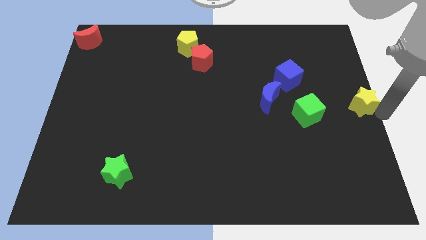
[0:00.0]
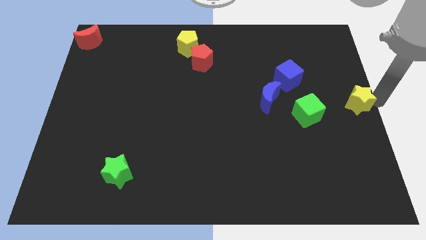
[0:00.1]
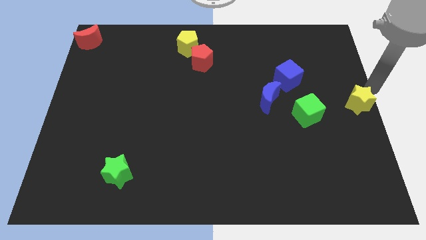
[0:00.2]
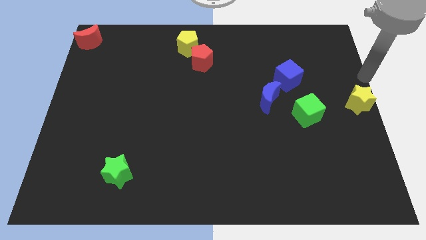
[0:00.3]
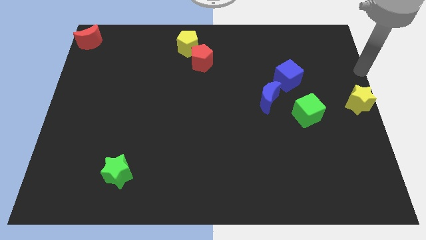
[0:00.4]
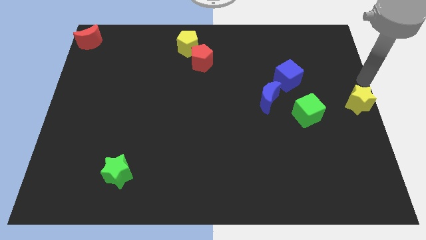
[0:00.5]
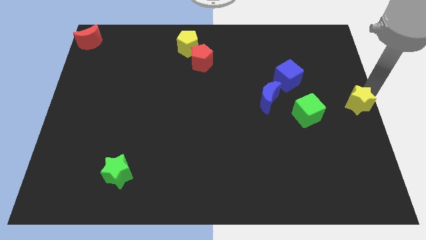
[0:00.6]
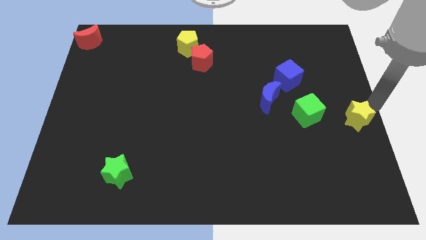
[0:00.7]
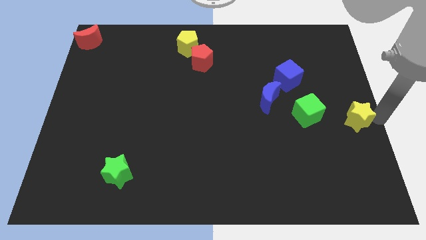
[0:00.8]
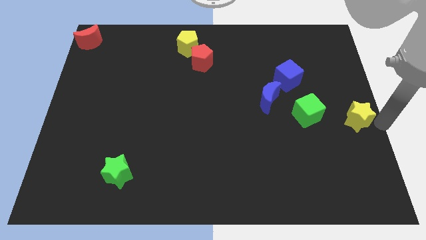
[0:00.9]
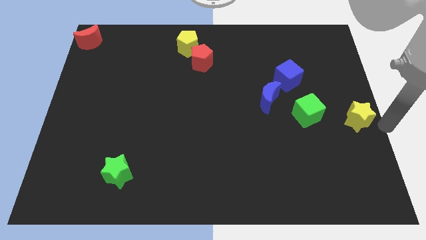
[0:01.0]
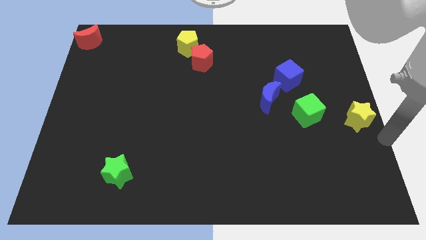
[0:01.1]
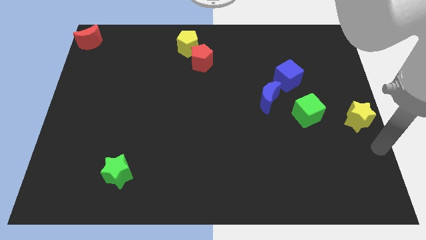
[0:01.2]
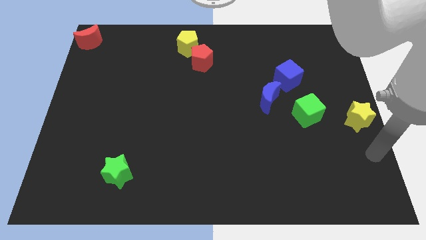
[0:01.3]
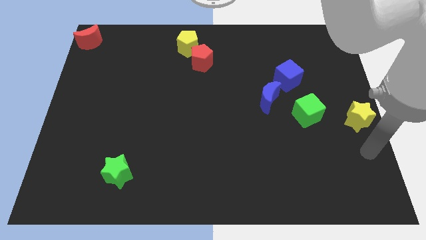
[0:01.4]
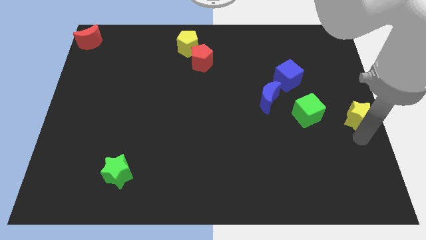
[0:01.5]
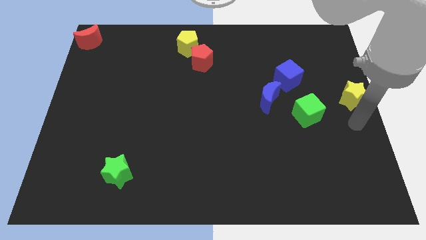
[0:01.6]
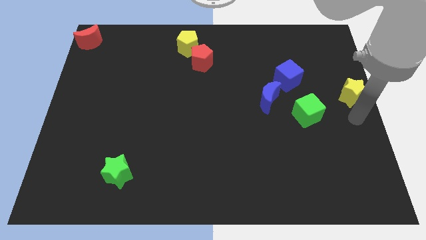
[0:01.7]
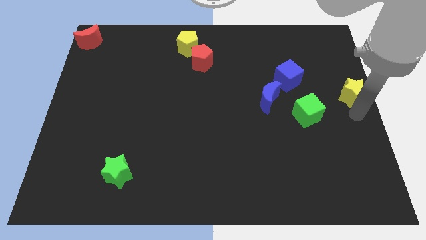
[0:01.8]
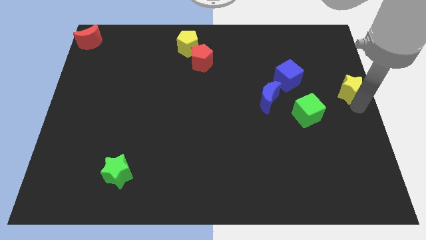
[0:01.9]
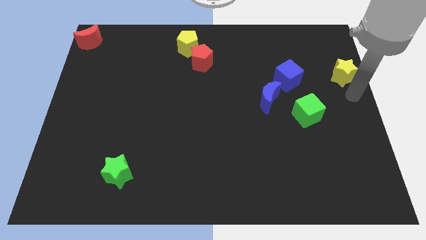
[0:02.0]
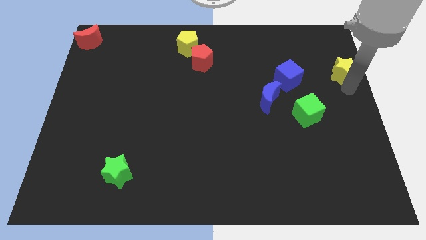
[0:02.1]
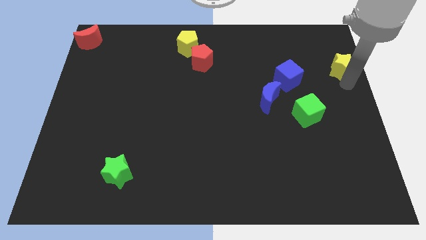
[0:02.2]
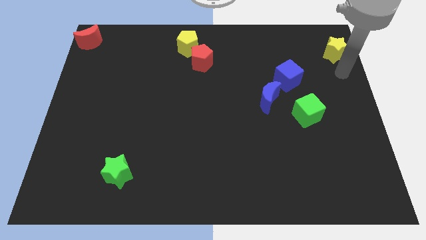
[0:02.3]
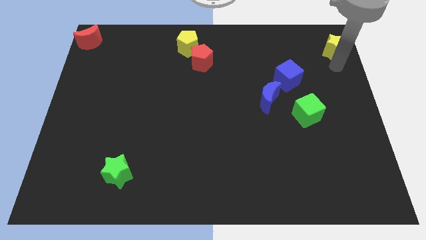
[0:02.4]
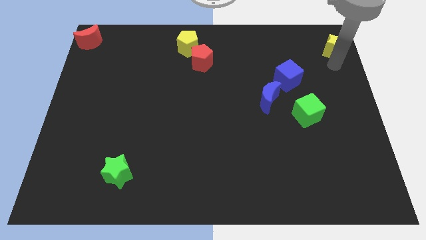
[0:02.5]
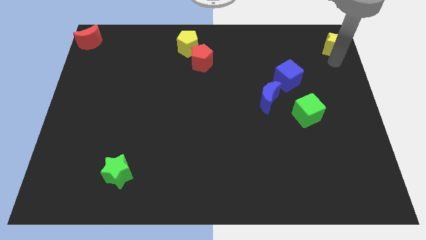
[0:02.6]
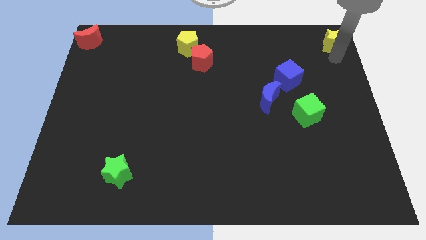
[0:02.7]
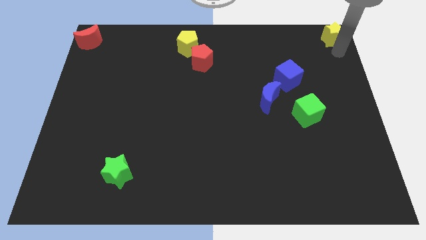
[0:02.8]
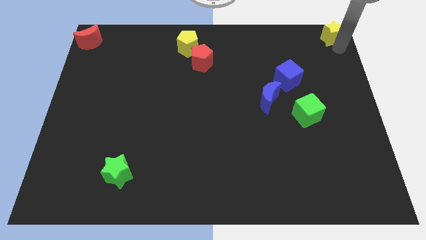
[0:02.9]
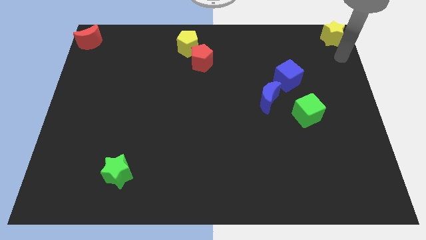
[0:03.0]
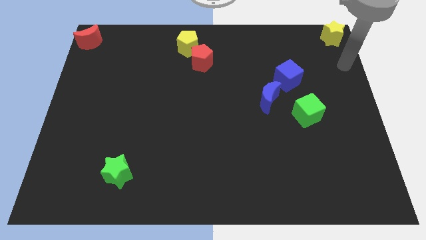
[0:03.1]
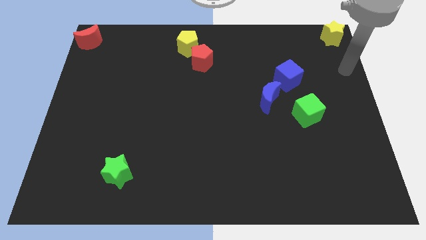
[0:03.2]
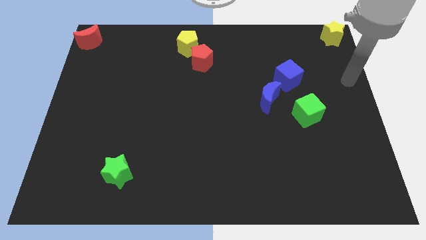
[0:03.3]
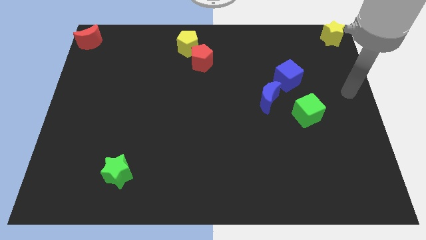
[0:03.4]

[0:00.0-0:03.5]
drag the yellow star to the top right corner of the board

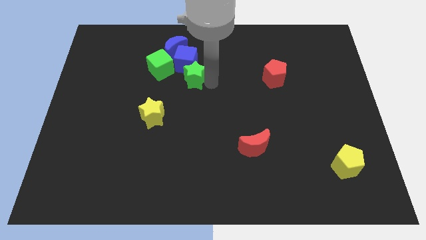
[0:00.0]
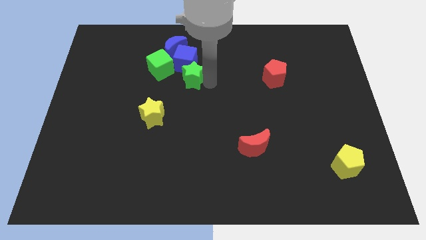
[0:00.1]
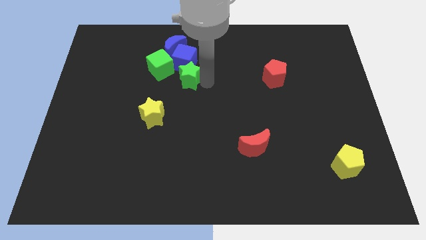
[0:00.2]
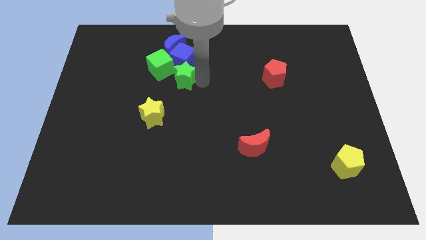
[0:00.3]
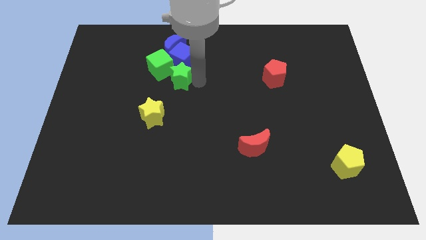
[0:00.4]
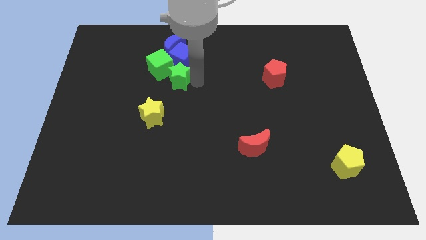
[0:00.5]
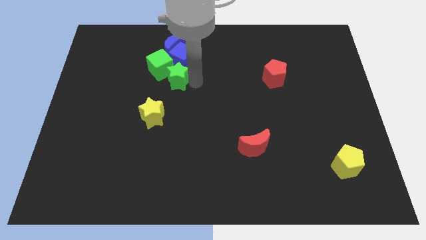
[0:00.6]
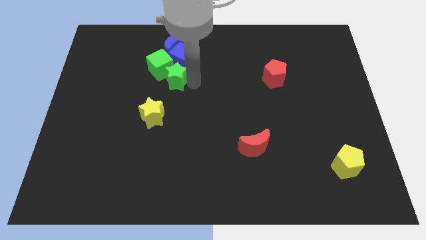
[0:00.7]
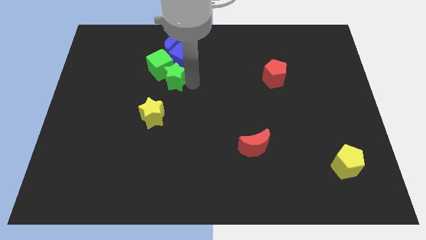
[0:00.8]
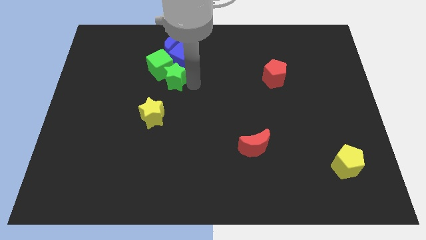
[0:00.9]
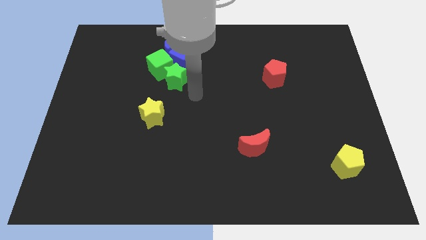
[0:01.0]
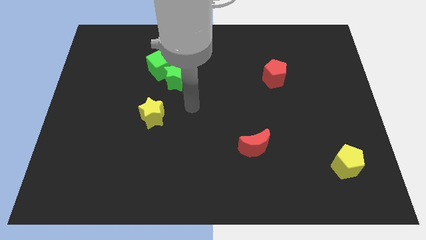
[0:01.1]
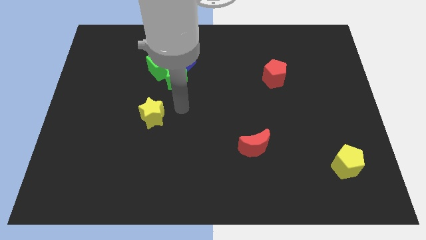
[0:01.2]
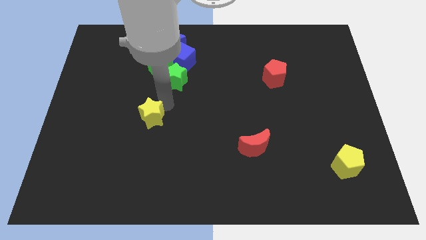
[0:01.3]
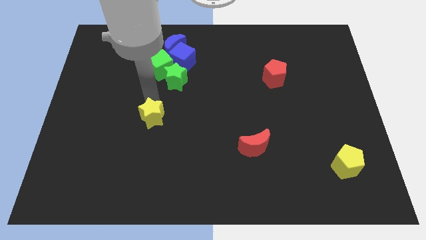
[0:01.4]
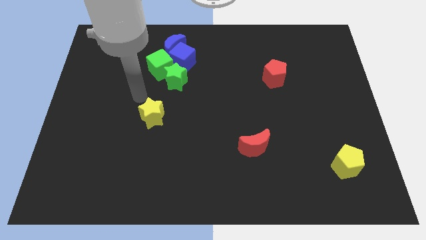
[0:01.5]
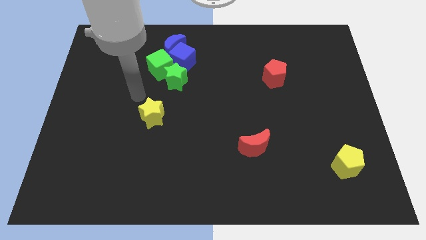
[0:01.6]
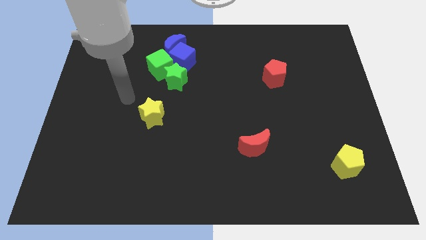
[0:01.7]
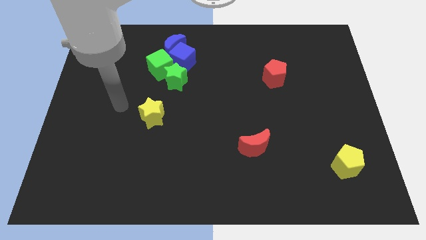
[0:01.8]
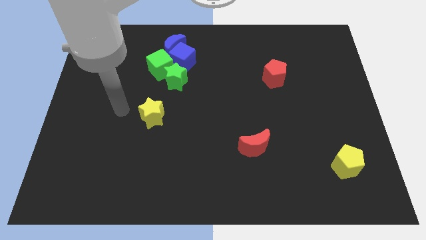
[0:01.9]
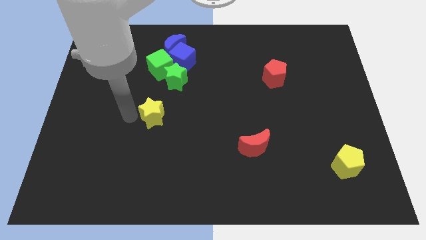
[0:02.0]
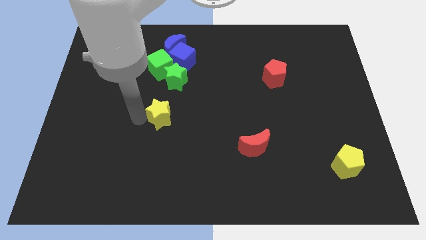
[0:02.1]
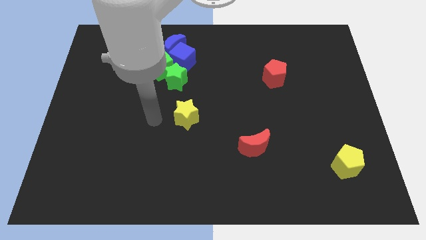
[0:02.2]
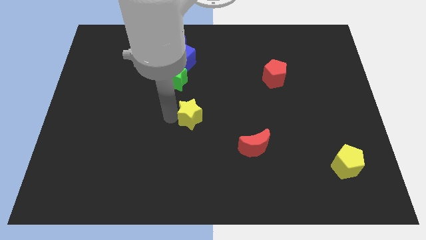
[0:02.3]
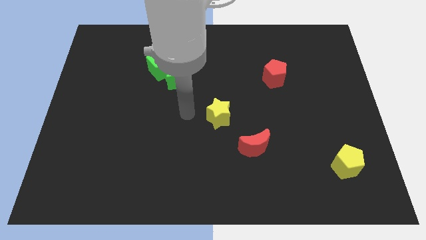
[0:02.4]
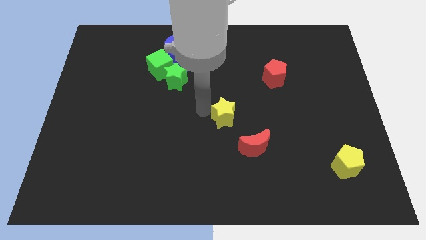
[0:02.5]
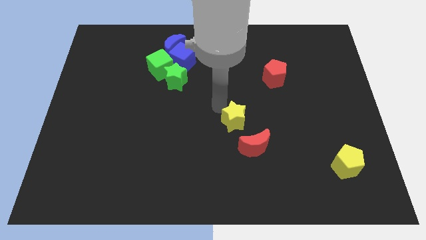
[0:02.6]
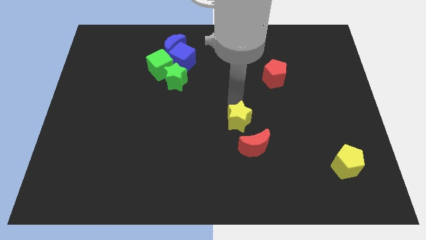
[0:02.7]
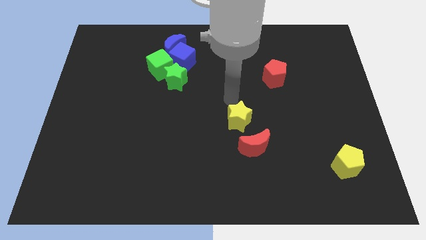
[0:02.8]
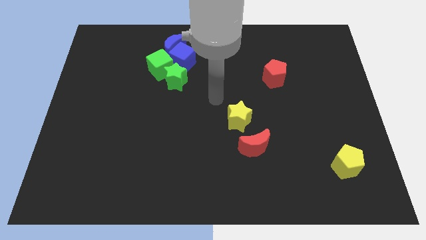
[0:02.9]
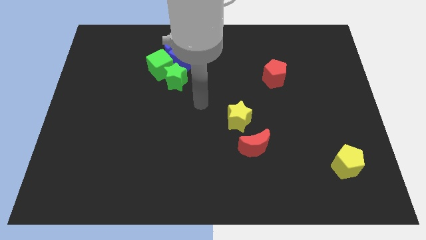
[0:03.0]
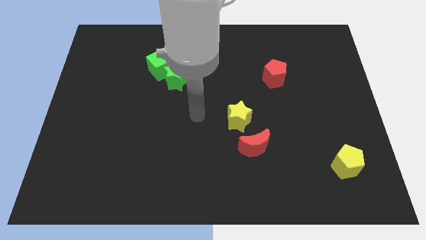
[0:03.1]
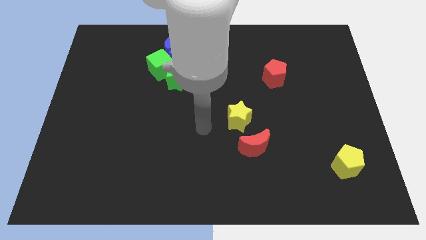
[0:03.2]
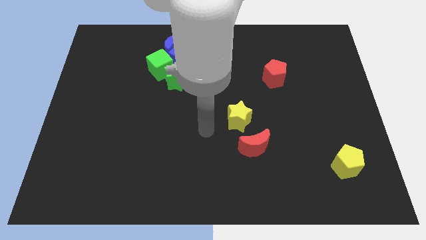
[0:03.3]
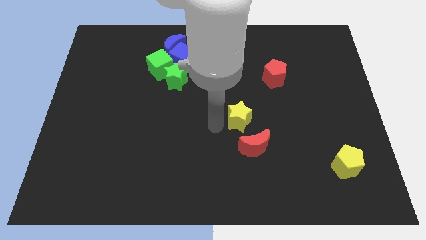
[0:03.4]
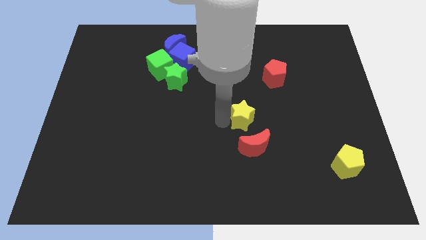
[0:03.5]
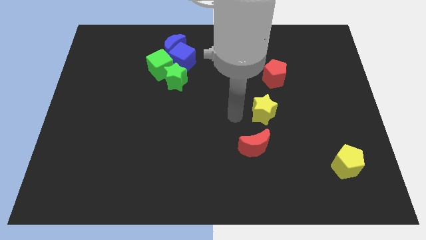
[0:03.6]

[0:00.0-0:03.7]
place yellow star between red pentagon and red moon

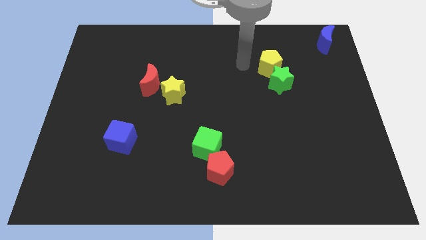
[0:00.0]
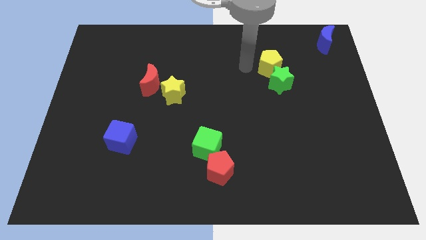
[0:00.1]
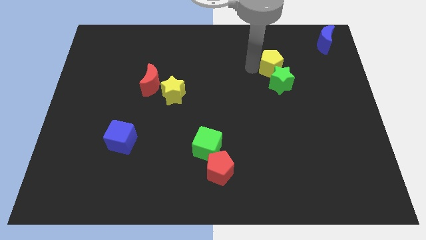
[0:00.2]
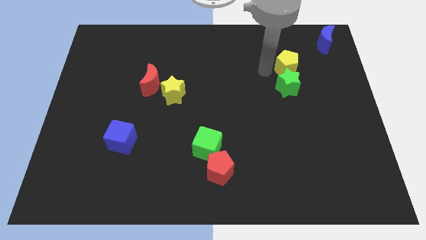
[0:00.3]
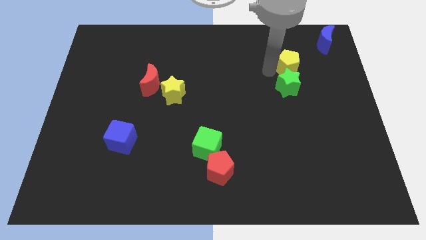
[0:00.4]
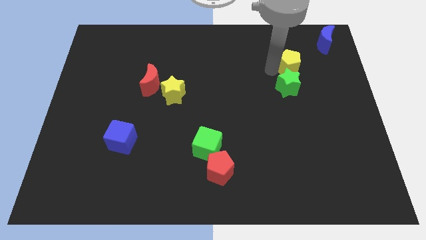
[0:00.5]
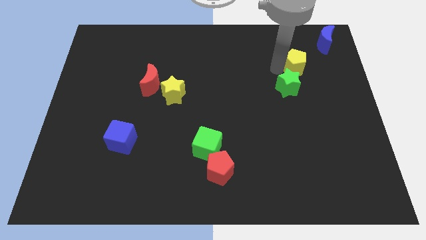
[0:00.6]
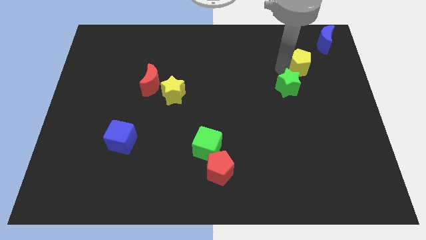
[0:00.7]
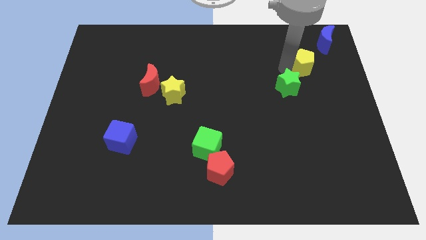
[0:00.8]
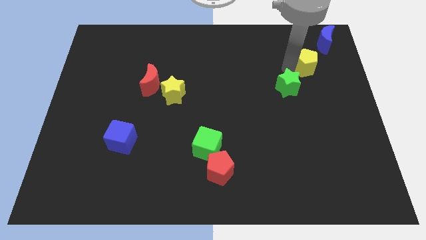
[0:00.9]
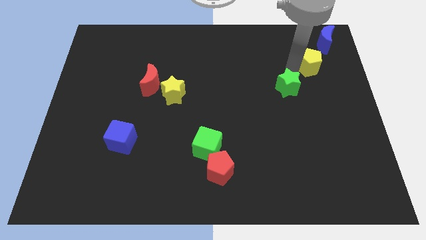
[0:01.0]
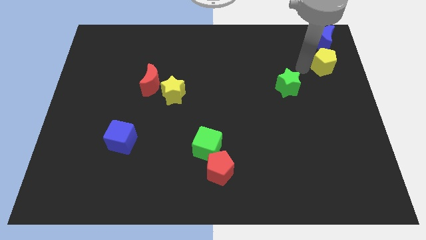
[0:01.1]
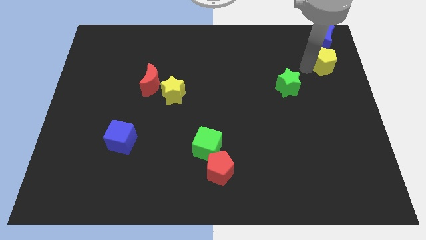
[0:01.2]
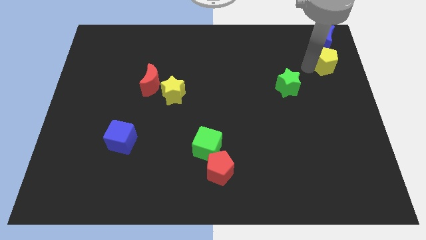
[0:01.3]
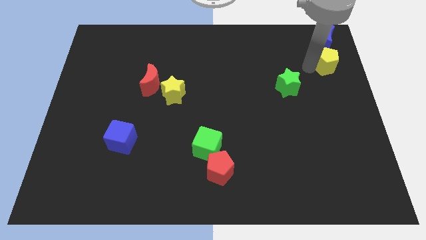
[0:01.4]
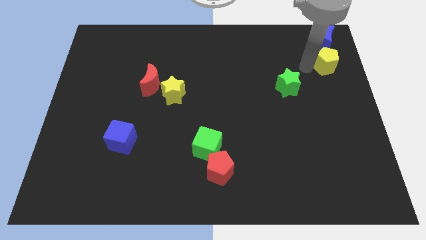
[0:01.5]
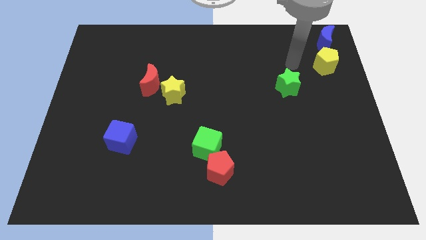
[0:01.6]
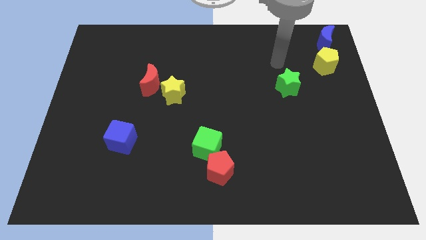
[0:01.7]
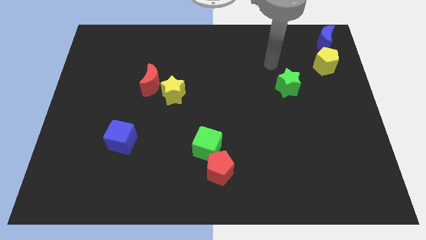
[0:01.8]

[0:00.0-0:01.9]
push the pentagon to the bottom of blue moon
